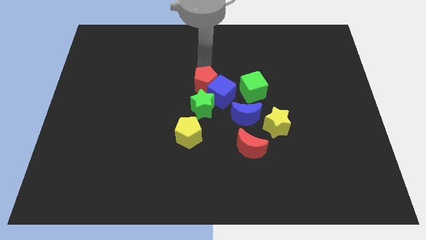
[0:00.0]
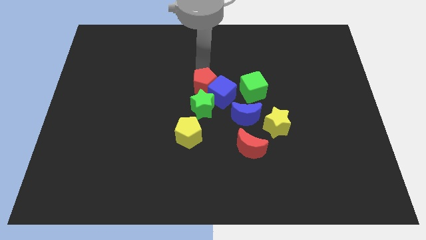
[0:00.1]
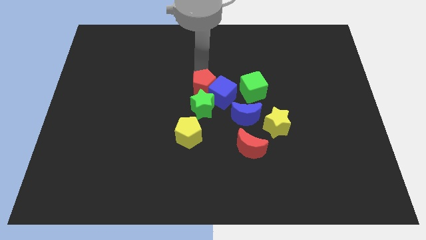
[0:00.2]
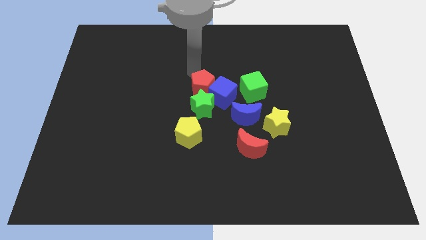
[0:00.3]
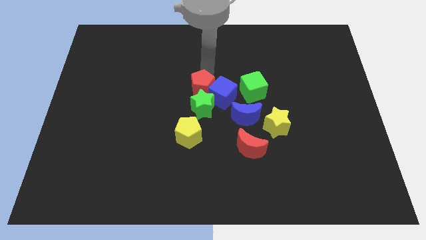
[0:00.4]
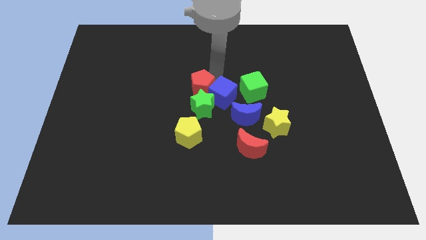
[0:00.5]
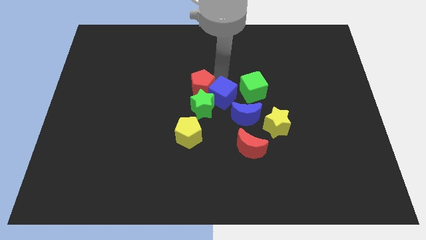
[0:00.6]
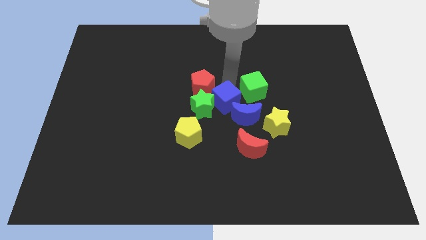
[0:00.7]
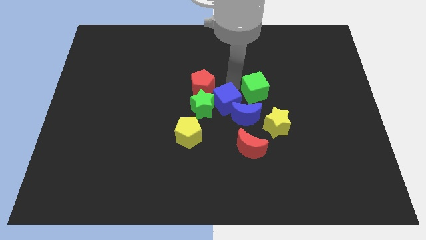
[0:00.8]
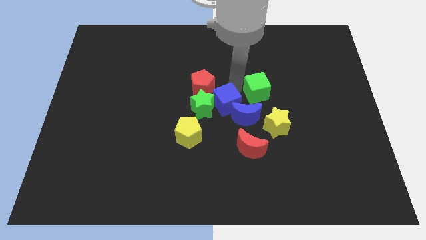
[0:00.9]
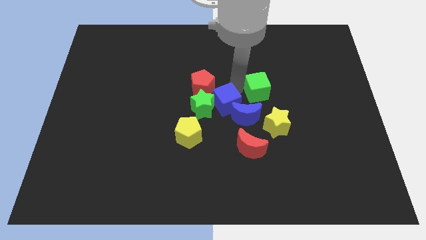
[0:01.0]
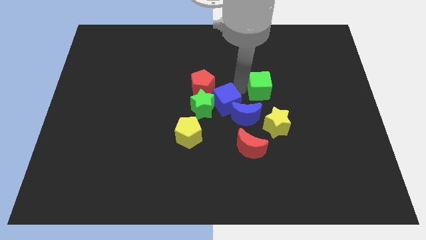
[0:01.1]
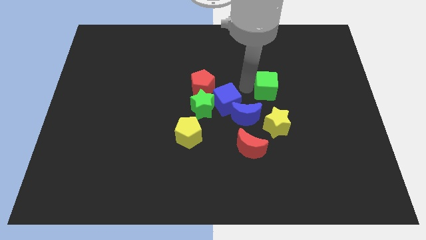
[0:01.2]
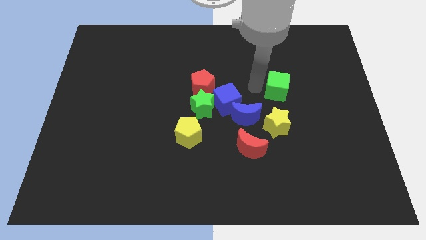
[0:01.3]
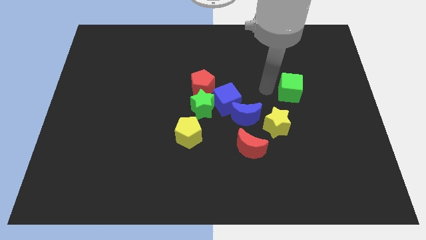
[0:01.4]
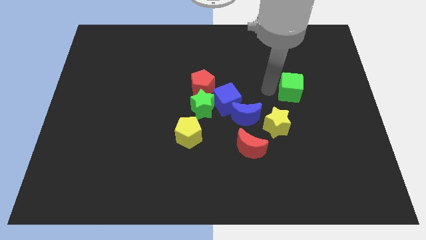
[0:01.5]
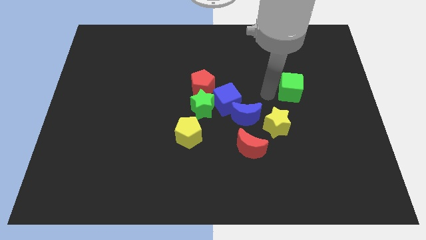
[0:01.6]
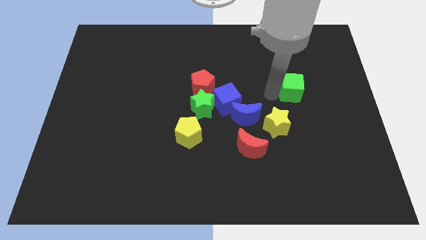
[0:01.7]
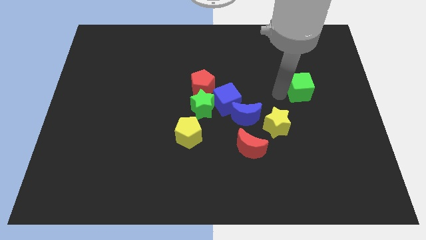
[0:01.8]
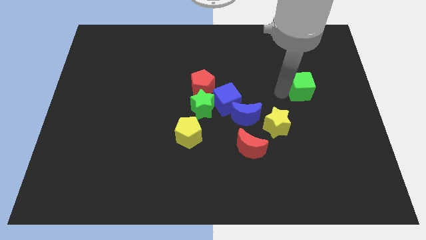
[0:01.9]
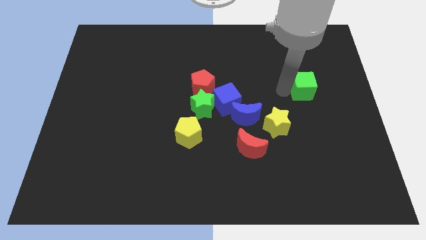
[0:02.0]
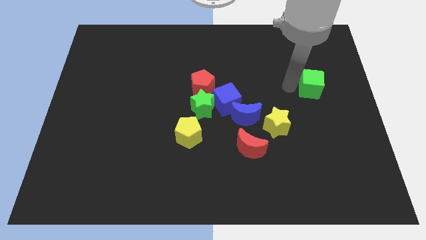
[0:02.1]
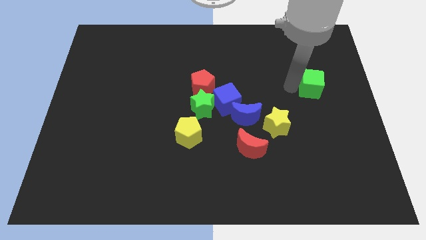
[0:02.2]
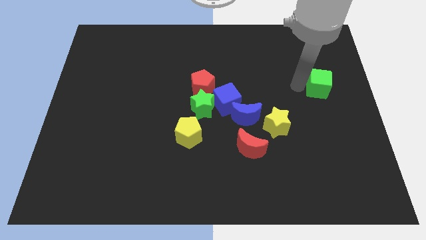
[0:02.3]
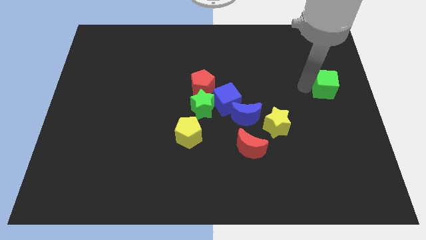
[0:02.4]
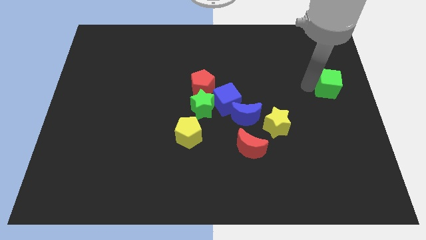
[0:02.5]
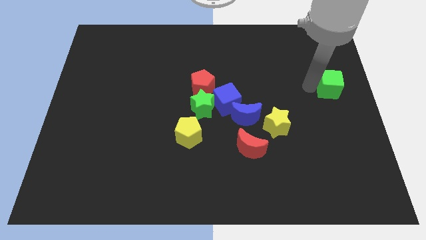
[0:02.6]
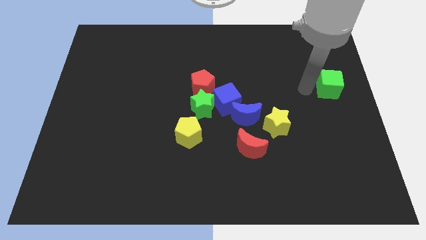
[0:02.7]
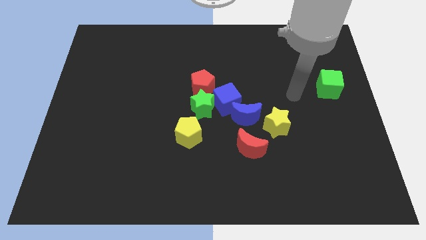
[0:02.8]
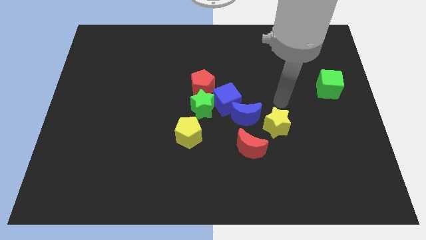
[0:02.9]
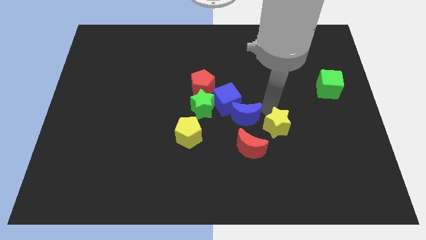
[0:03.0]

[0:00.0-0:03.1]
separate the green cube from the group of blocks

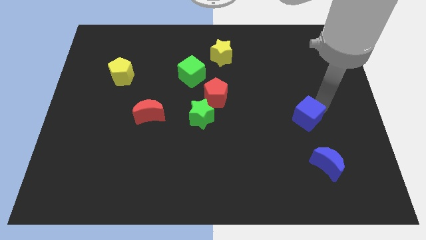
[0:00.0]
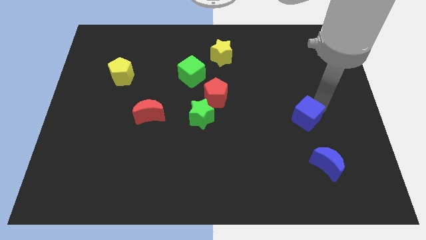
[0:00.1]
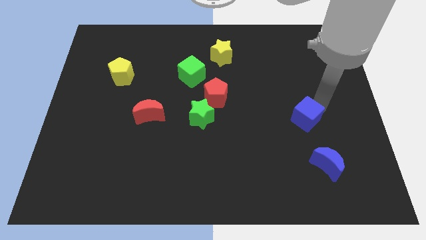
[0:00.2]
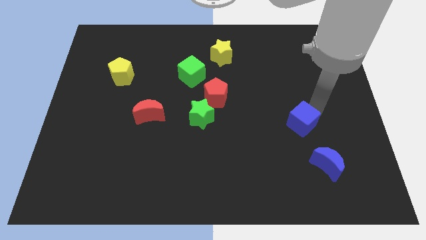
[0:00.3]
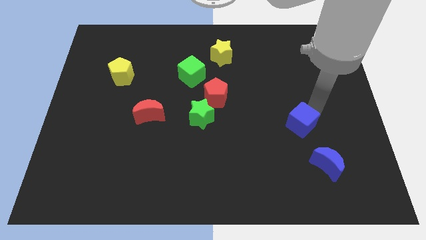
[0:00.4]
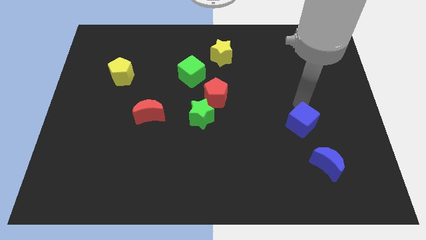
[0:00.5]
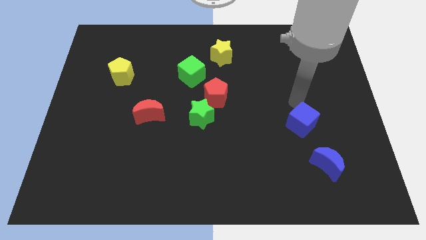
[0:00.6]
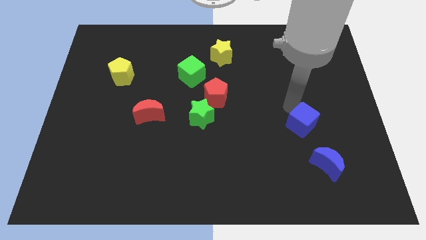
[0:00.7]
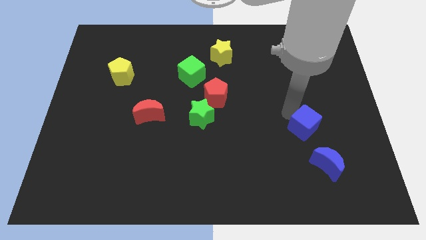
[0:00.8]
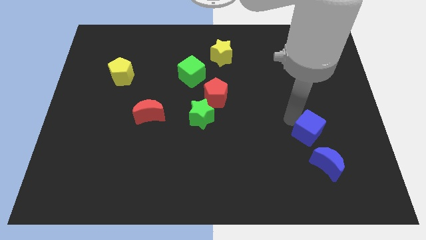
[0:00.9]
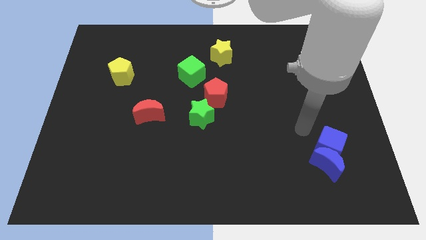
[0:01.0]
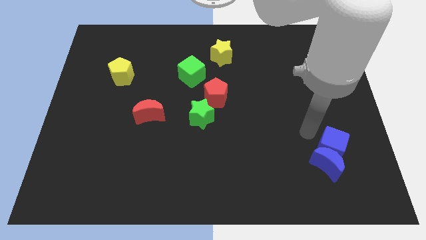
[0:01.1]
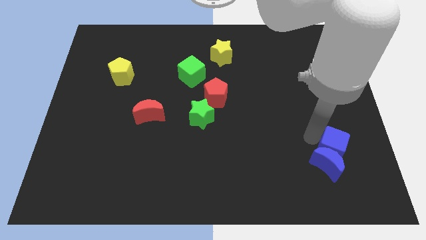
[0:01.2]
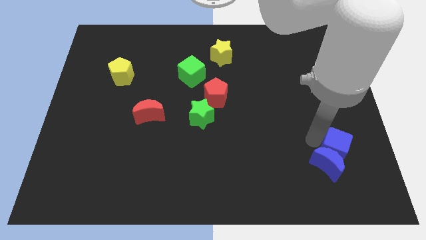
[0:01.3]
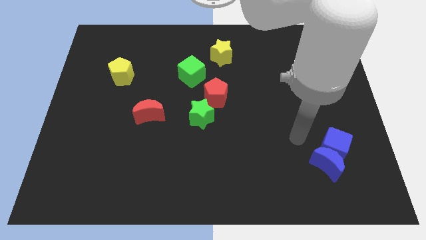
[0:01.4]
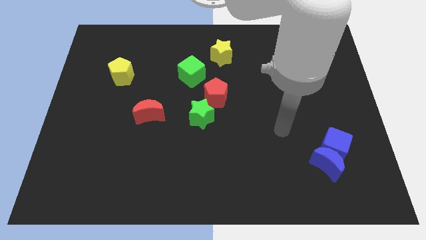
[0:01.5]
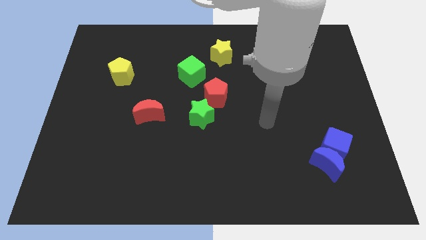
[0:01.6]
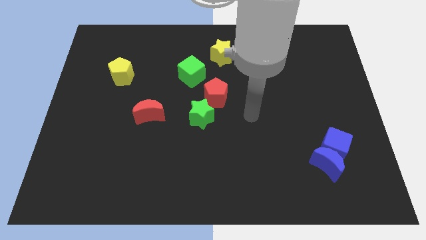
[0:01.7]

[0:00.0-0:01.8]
place the blue cube above the blue moon

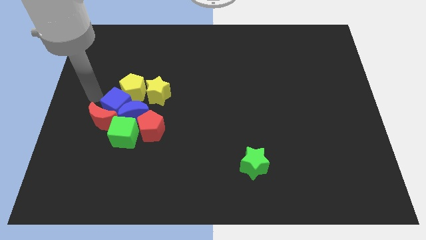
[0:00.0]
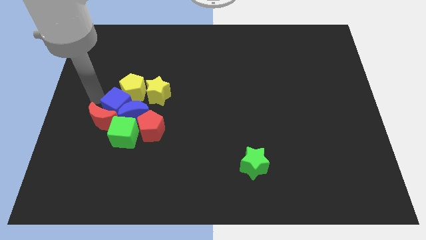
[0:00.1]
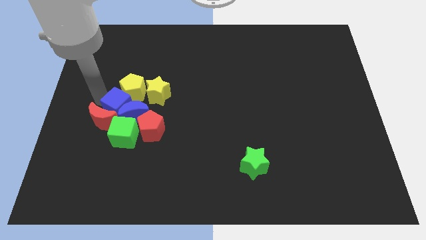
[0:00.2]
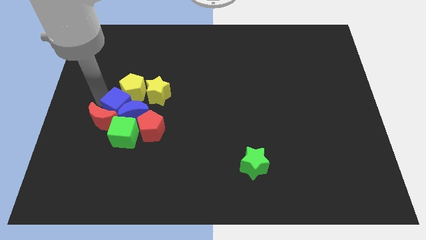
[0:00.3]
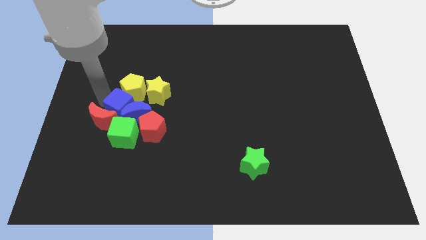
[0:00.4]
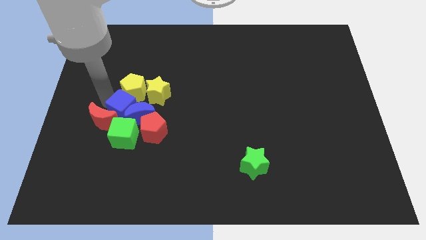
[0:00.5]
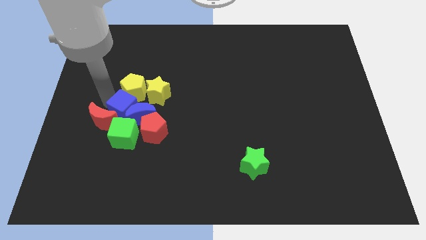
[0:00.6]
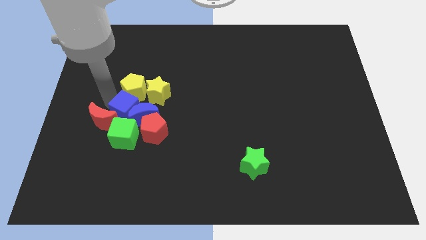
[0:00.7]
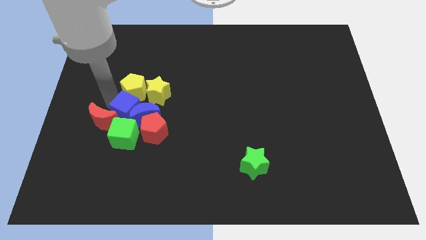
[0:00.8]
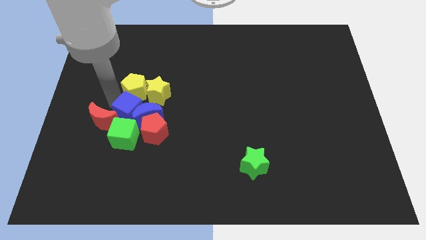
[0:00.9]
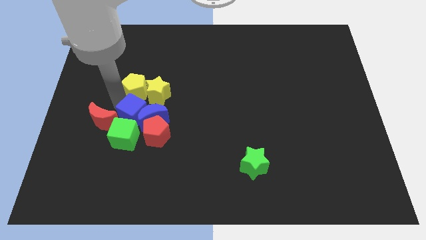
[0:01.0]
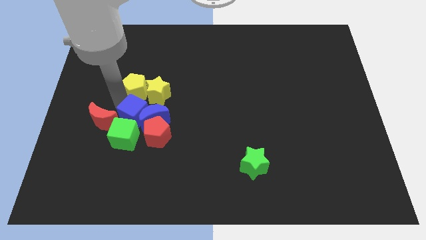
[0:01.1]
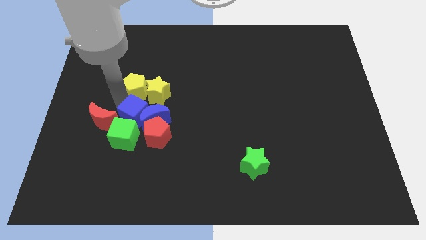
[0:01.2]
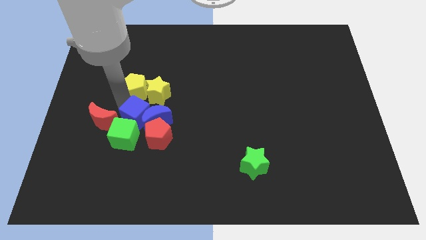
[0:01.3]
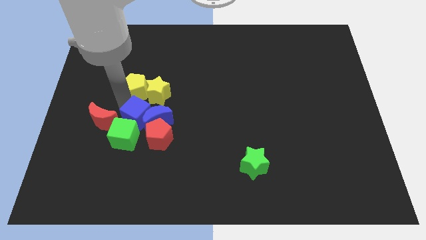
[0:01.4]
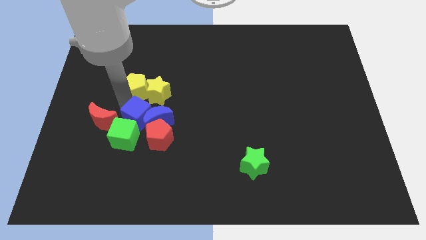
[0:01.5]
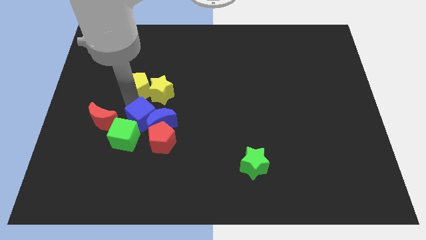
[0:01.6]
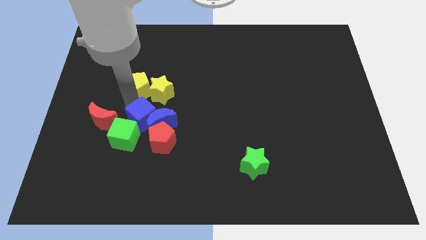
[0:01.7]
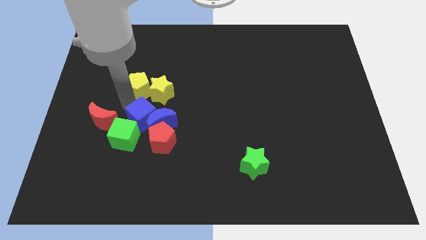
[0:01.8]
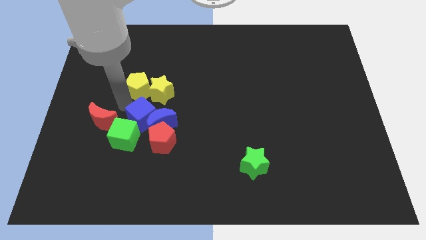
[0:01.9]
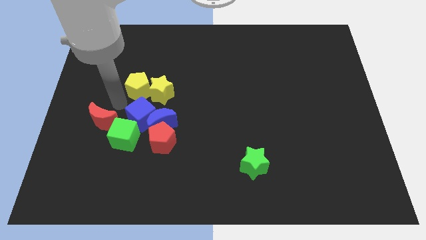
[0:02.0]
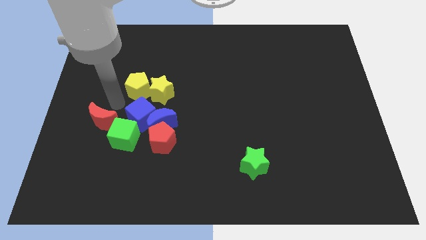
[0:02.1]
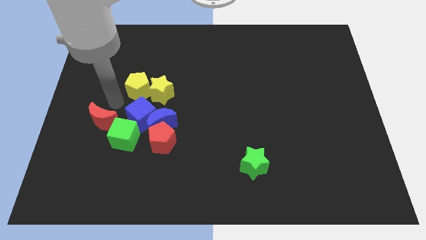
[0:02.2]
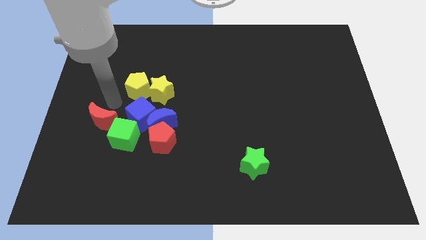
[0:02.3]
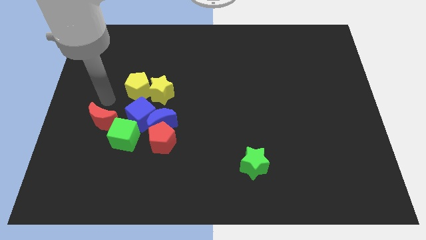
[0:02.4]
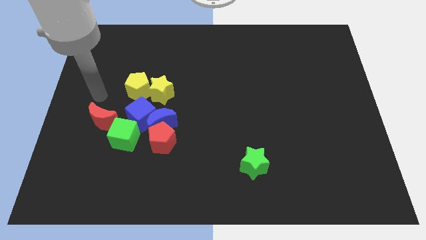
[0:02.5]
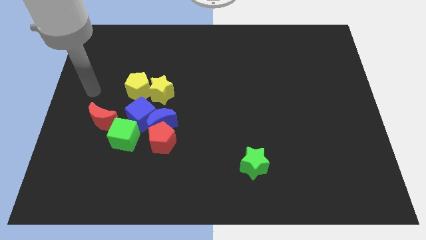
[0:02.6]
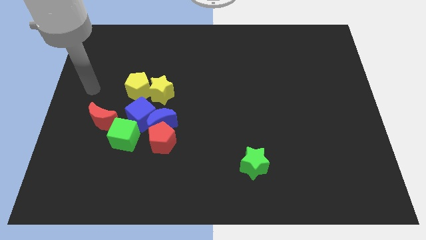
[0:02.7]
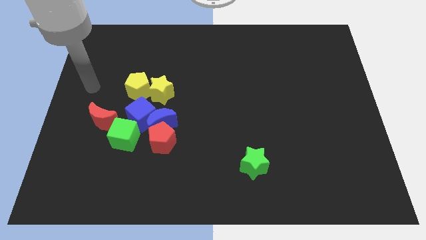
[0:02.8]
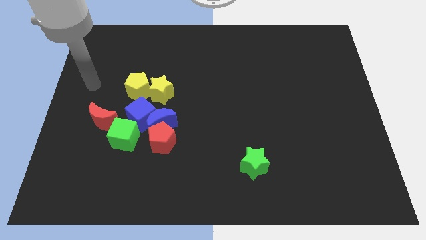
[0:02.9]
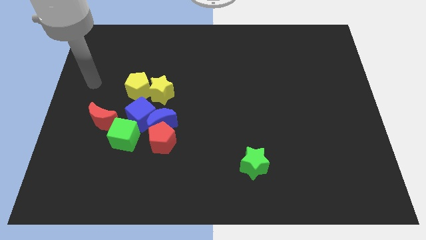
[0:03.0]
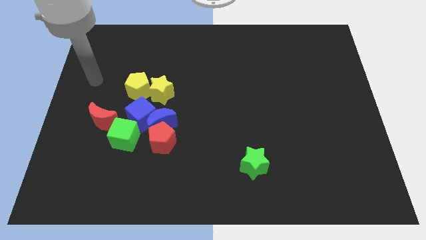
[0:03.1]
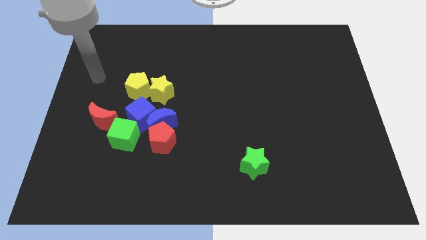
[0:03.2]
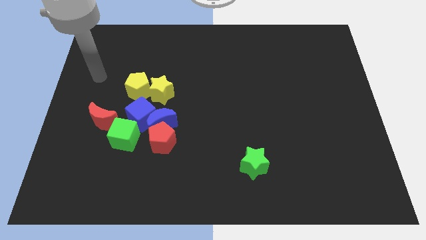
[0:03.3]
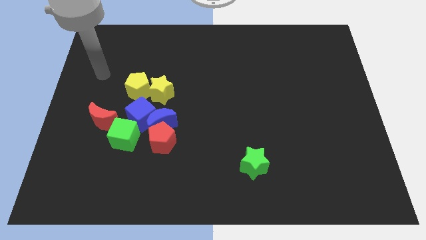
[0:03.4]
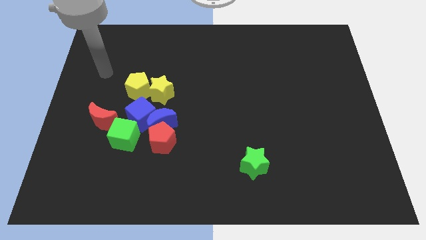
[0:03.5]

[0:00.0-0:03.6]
push blue cube slightly down

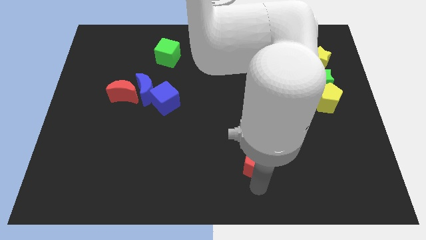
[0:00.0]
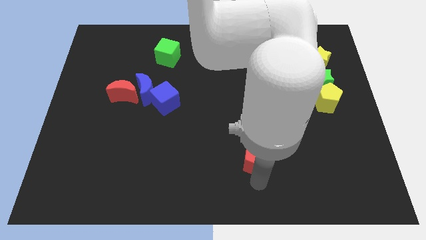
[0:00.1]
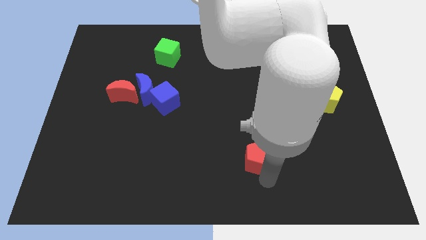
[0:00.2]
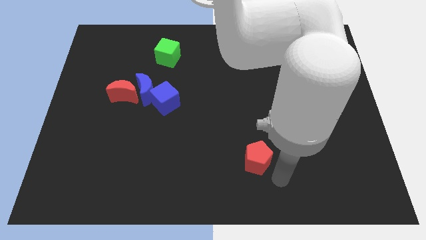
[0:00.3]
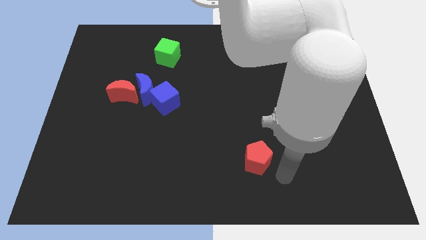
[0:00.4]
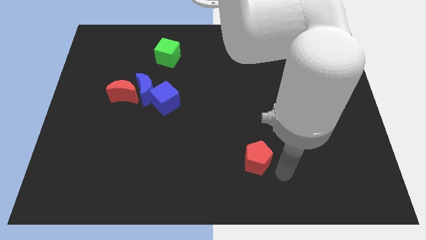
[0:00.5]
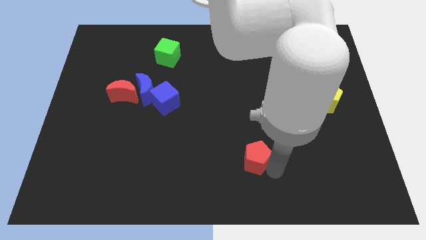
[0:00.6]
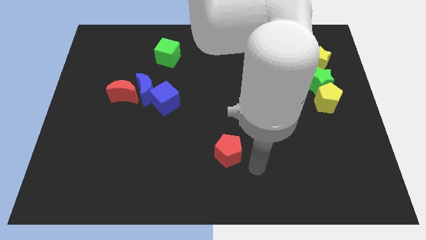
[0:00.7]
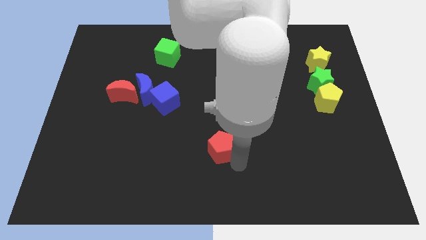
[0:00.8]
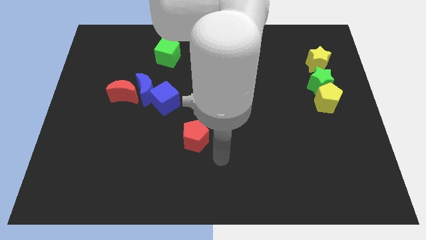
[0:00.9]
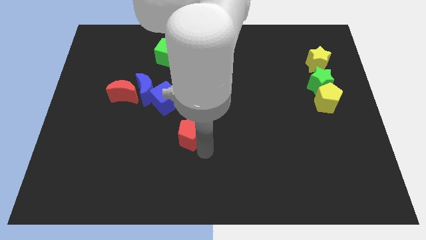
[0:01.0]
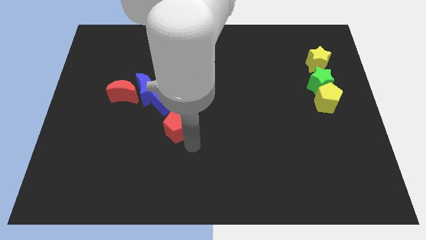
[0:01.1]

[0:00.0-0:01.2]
move red pentagon at the bottom right of blue cube
